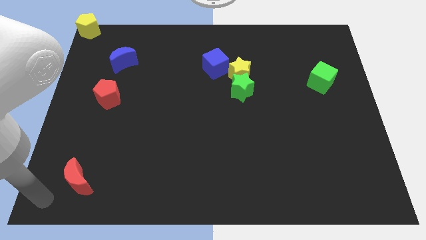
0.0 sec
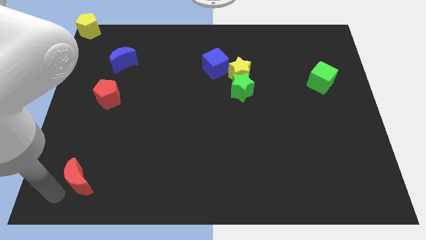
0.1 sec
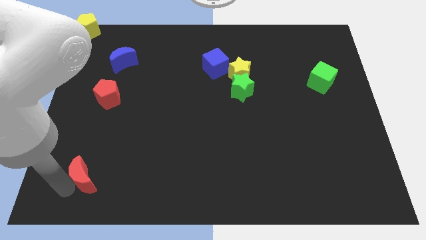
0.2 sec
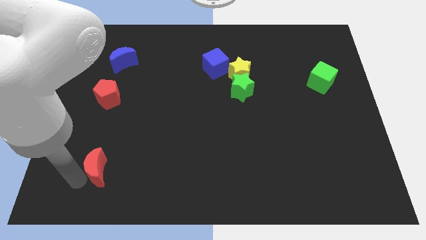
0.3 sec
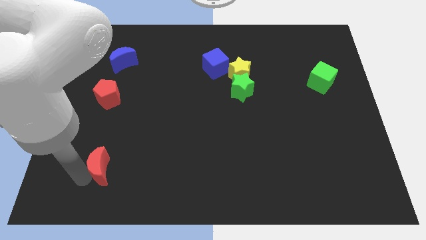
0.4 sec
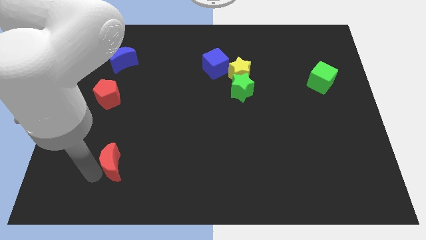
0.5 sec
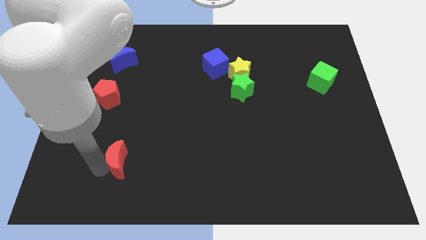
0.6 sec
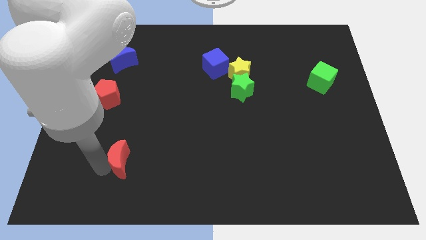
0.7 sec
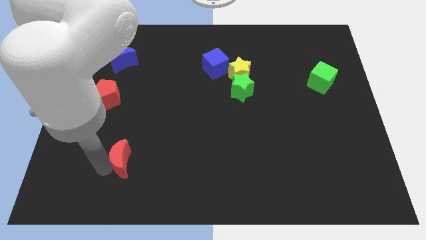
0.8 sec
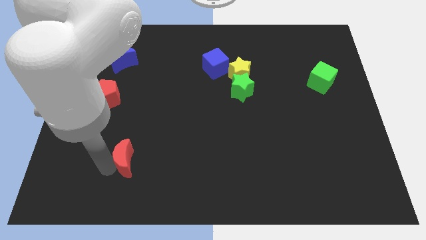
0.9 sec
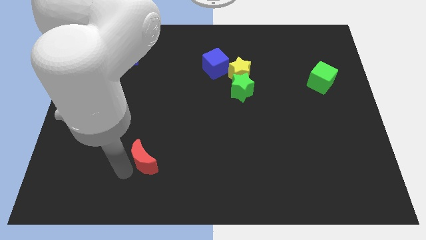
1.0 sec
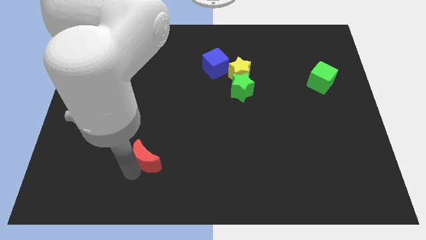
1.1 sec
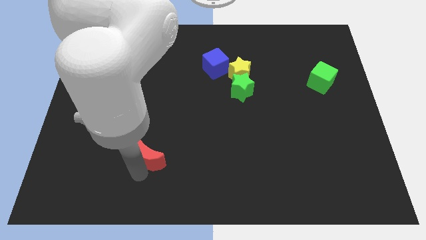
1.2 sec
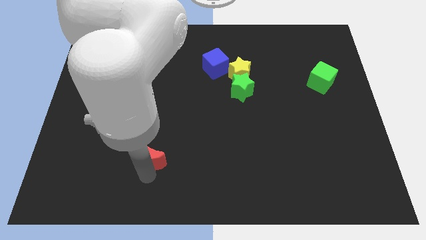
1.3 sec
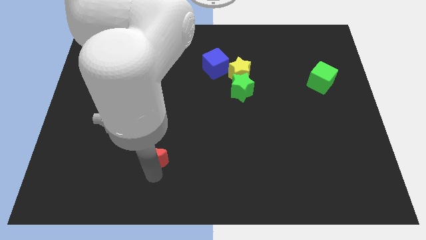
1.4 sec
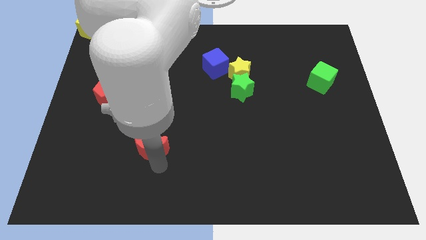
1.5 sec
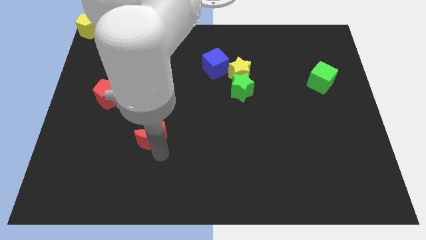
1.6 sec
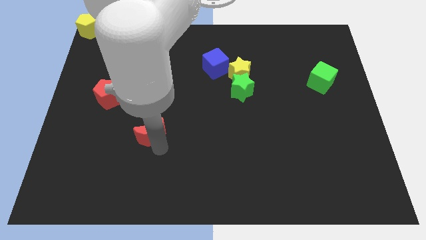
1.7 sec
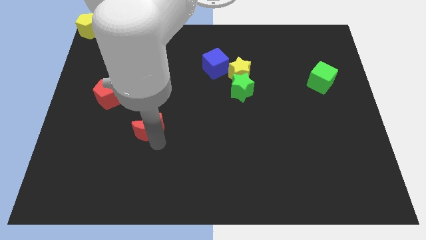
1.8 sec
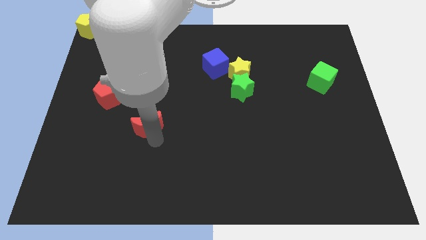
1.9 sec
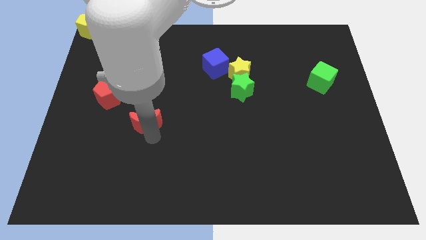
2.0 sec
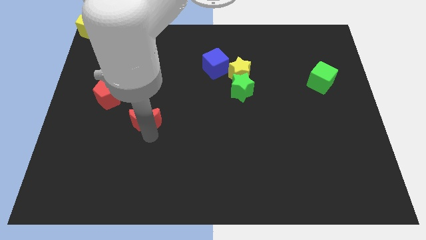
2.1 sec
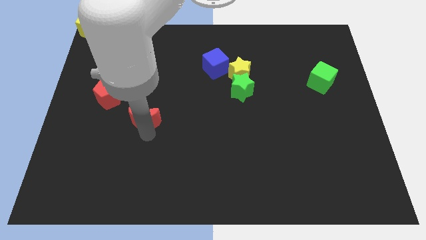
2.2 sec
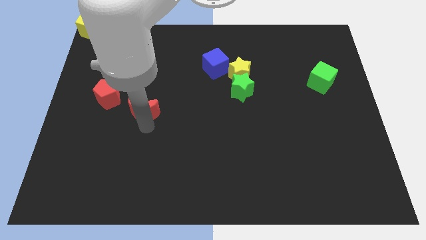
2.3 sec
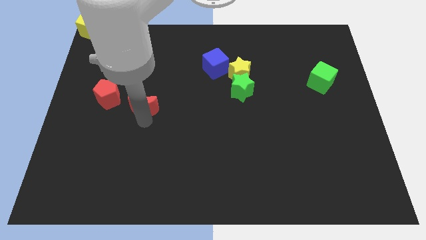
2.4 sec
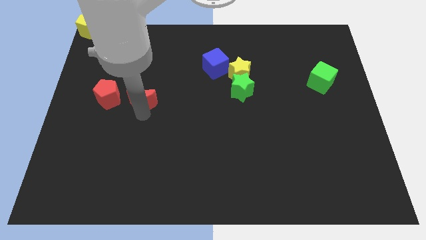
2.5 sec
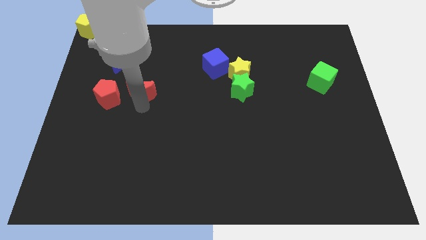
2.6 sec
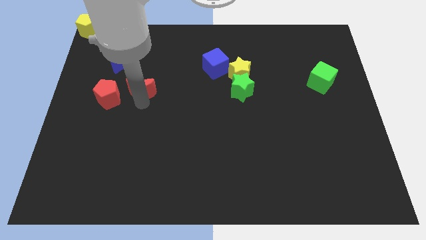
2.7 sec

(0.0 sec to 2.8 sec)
push red crescent beside red pentagon

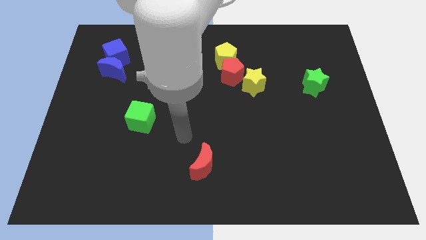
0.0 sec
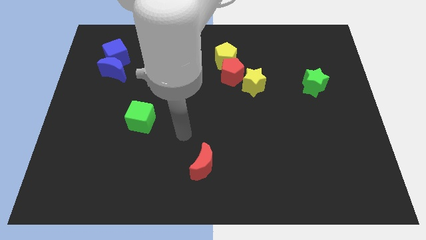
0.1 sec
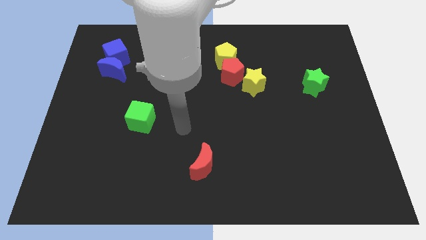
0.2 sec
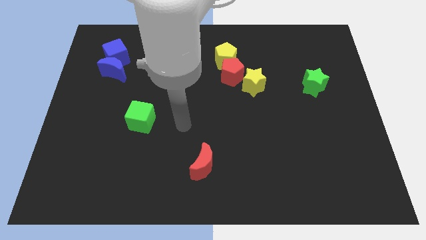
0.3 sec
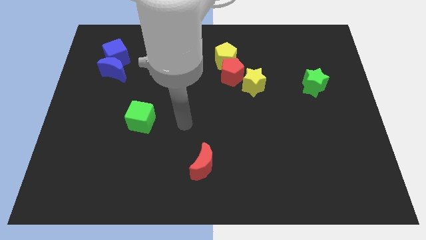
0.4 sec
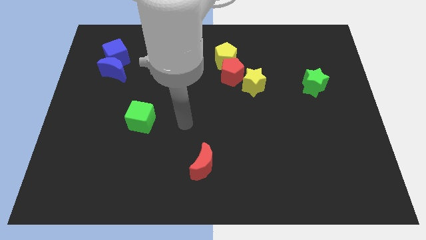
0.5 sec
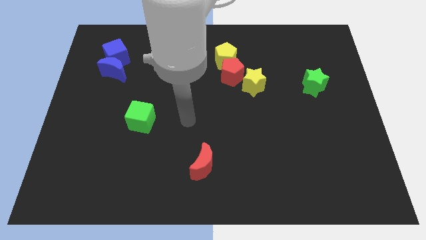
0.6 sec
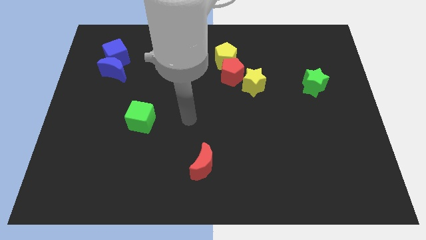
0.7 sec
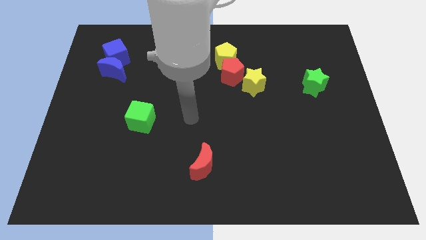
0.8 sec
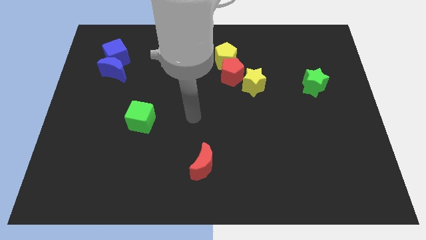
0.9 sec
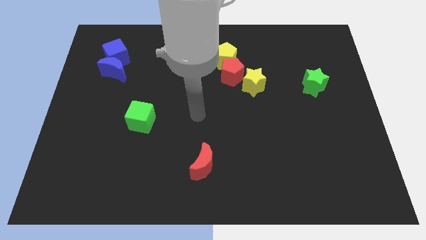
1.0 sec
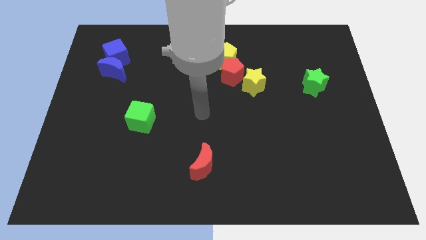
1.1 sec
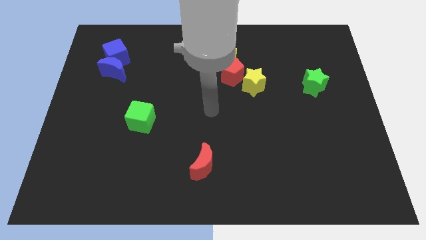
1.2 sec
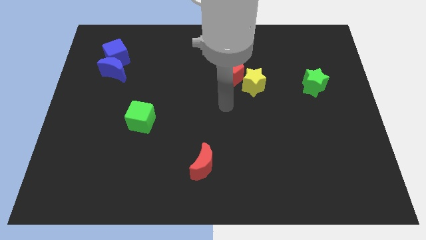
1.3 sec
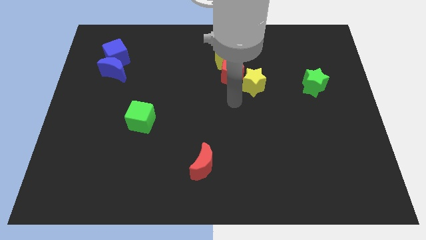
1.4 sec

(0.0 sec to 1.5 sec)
place your arm to the bottom side of the red pentagon

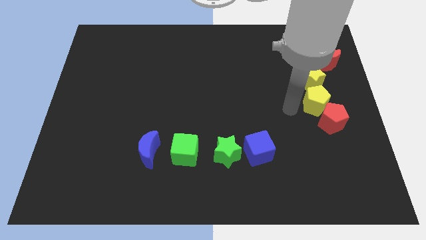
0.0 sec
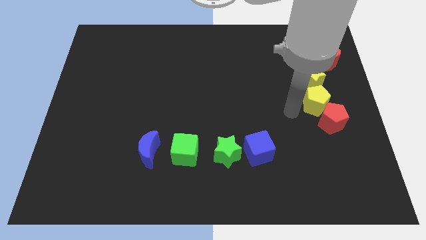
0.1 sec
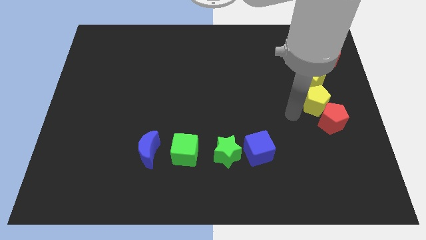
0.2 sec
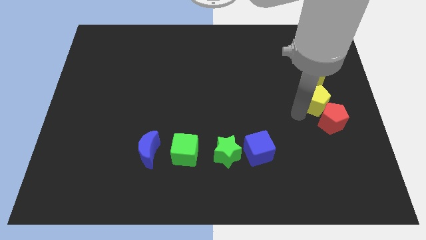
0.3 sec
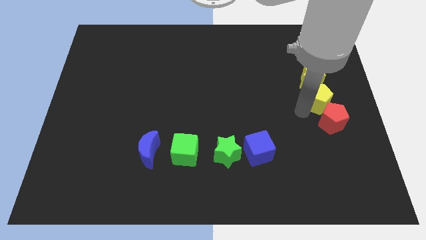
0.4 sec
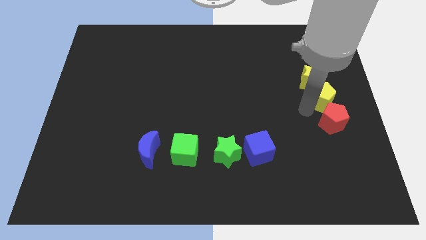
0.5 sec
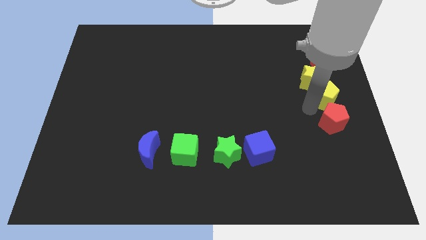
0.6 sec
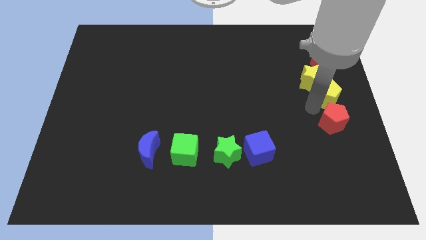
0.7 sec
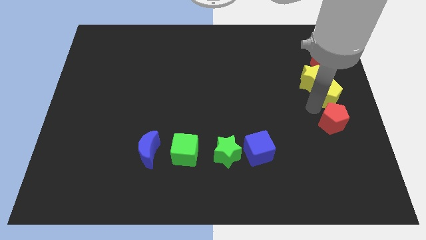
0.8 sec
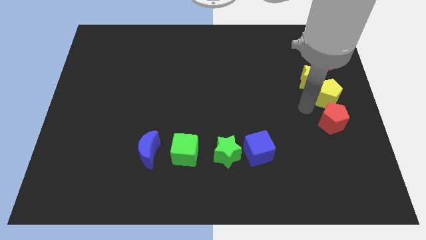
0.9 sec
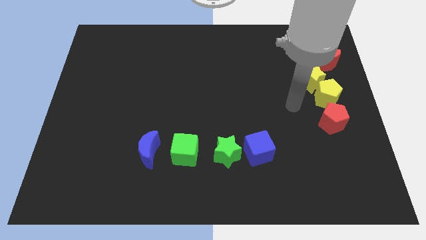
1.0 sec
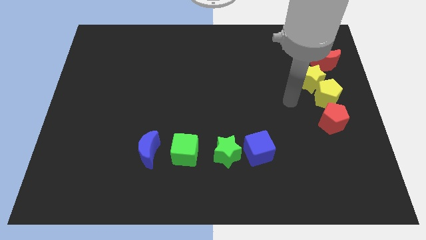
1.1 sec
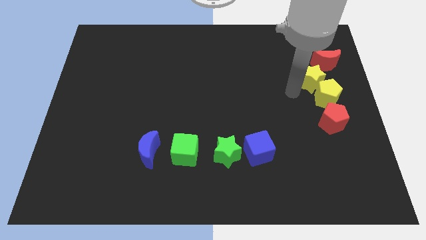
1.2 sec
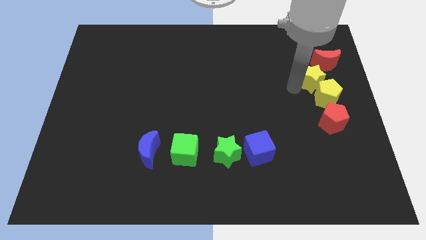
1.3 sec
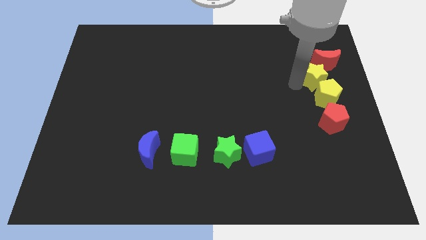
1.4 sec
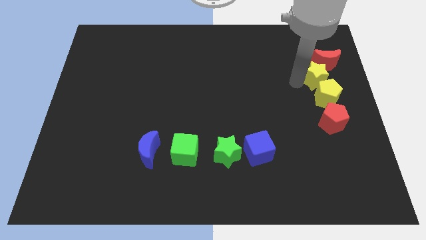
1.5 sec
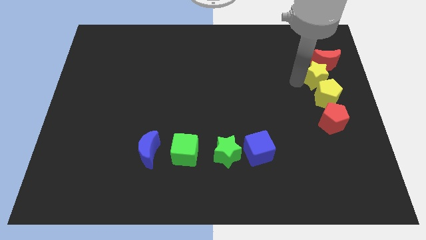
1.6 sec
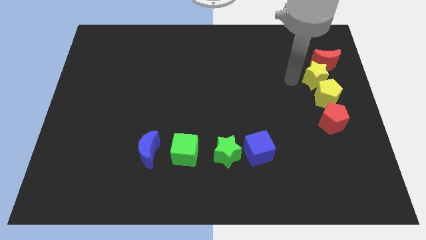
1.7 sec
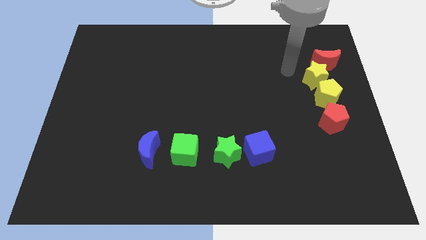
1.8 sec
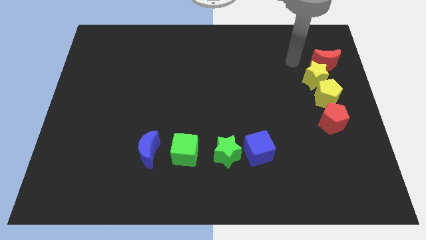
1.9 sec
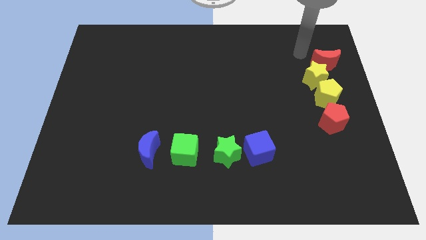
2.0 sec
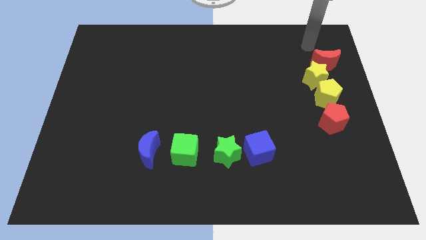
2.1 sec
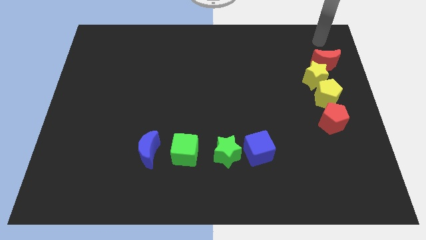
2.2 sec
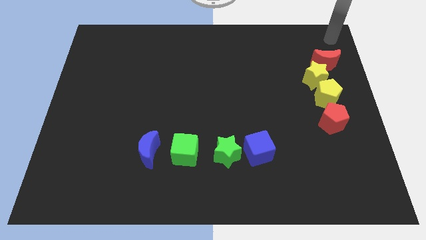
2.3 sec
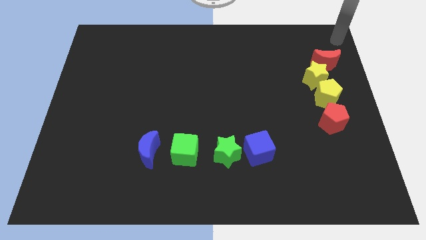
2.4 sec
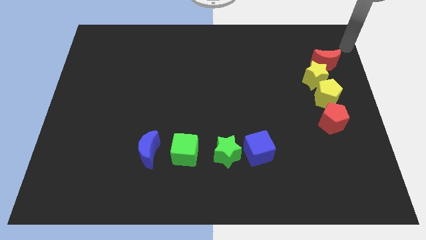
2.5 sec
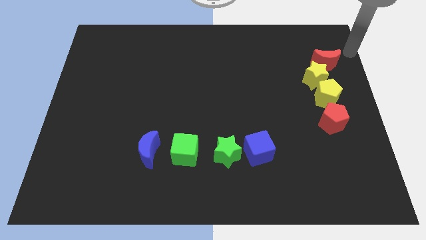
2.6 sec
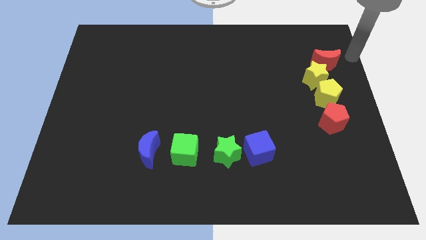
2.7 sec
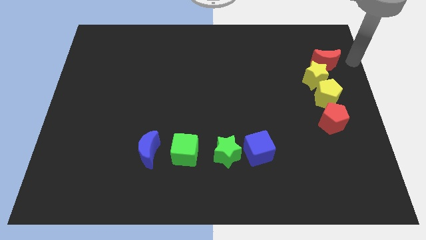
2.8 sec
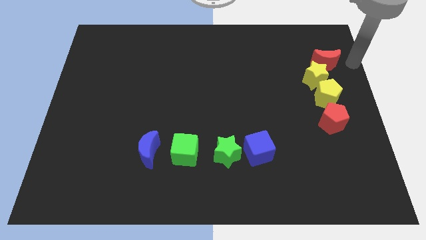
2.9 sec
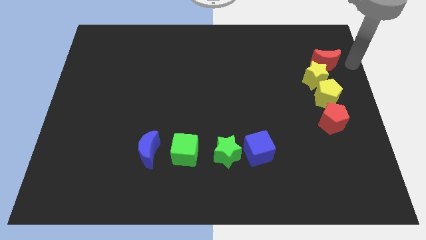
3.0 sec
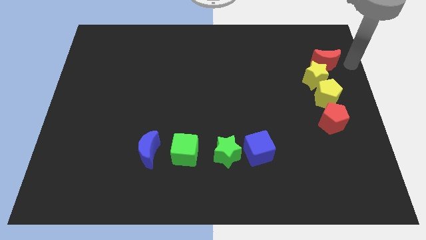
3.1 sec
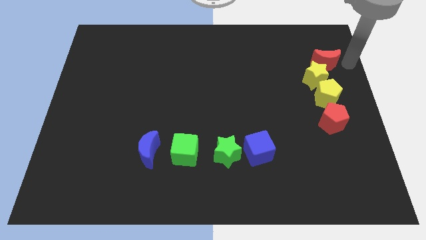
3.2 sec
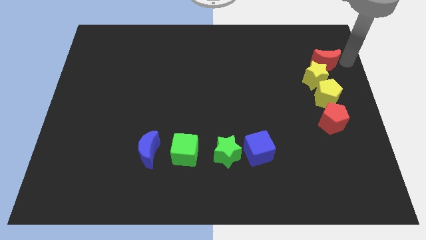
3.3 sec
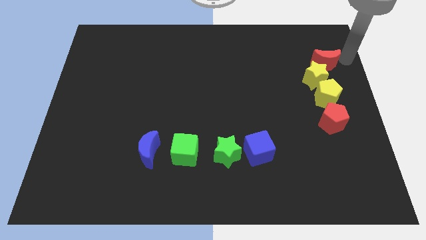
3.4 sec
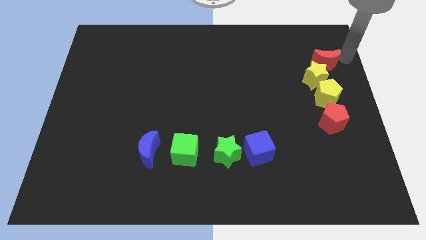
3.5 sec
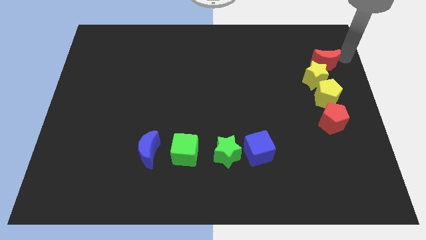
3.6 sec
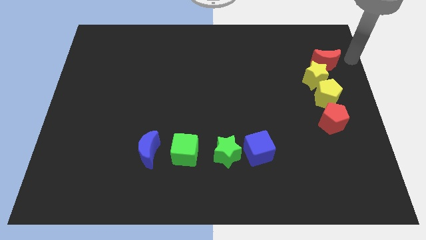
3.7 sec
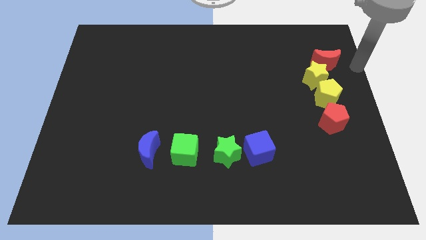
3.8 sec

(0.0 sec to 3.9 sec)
slightly push the yellow star and yellow pentagon into the vertical line

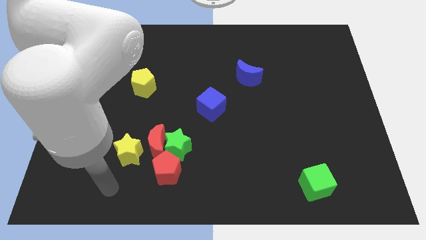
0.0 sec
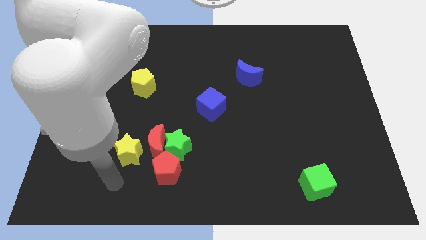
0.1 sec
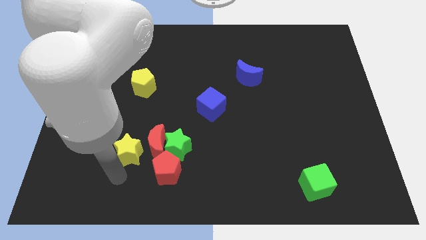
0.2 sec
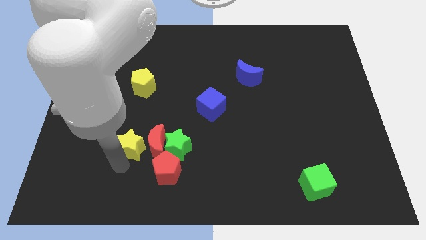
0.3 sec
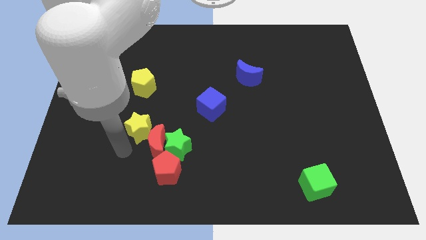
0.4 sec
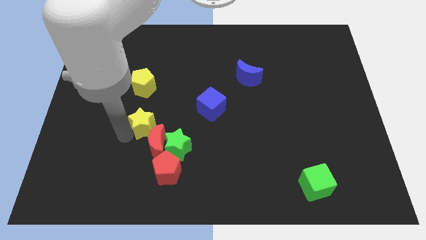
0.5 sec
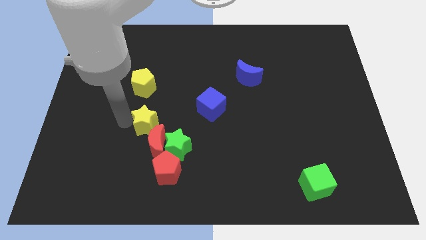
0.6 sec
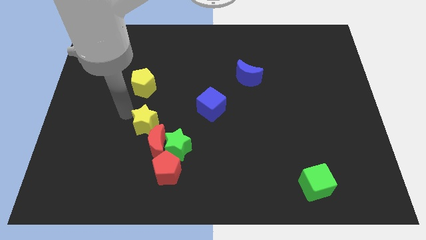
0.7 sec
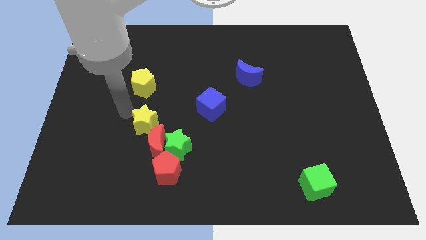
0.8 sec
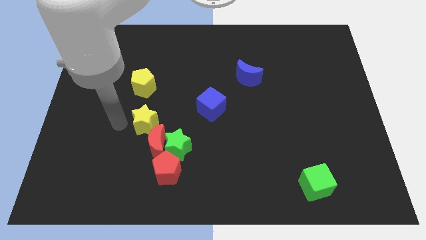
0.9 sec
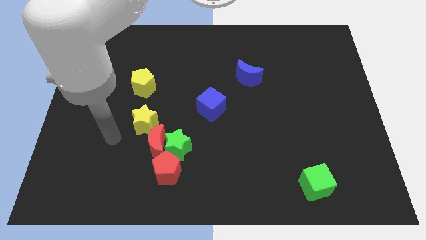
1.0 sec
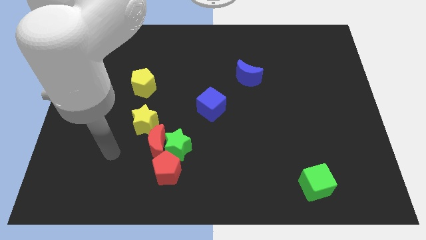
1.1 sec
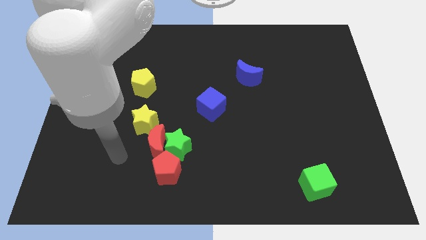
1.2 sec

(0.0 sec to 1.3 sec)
move yellow star slightly up
